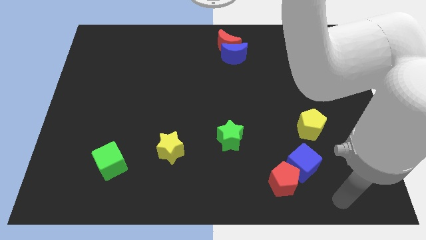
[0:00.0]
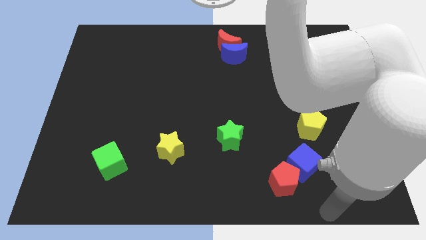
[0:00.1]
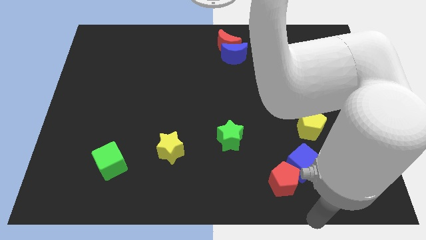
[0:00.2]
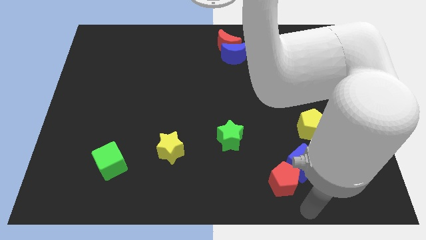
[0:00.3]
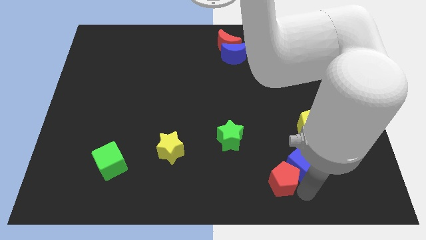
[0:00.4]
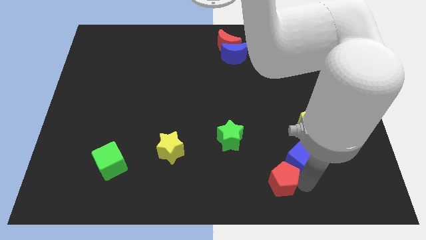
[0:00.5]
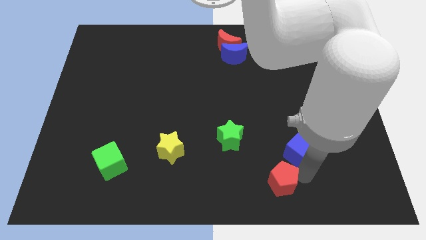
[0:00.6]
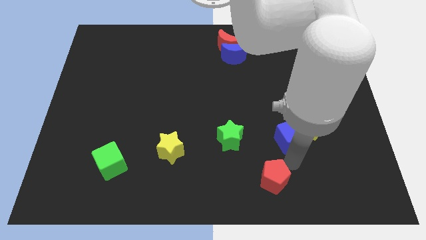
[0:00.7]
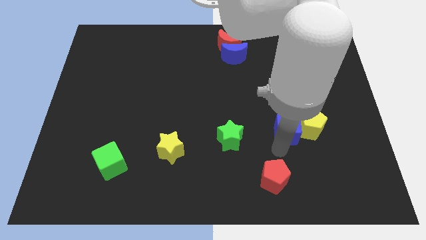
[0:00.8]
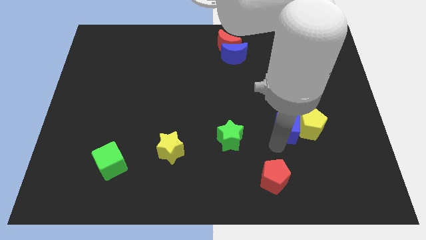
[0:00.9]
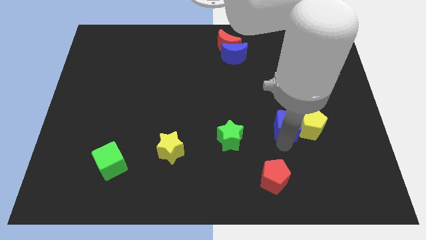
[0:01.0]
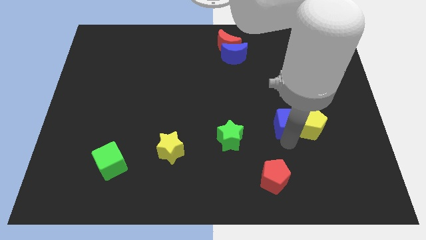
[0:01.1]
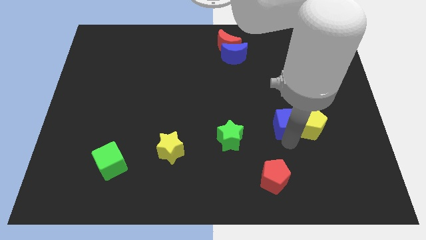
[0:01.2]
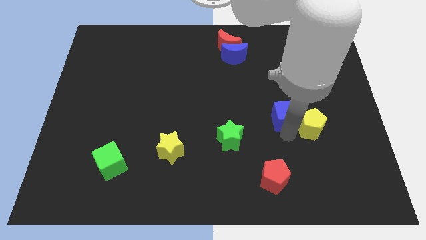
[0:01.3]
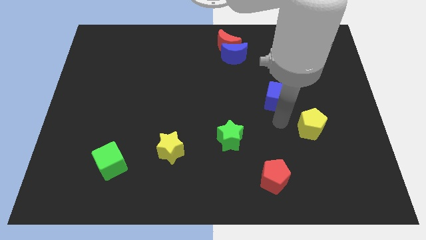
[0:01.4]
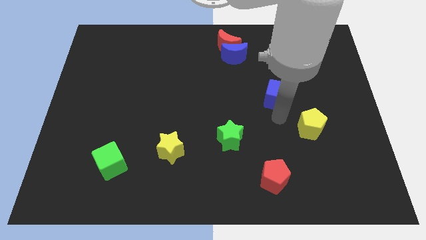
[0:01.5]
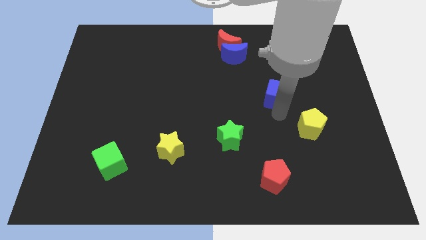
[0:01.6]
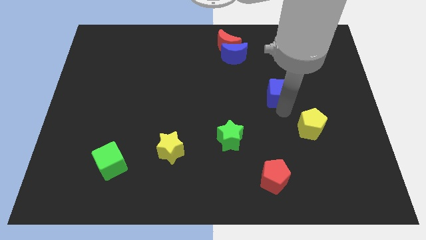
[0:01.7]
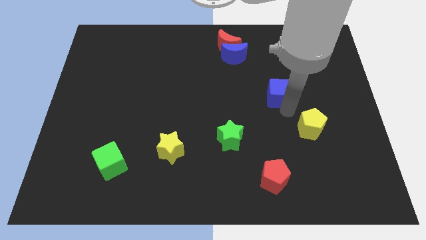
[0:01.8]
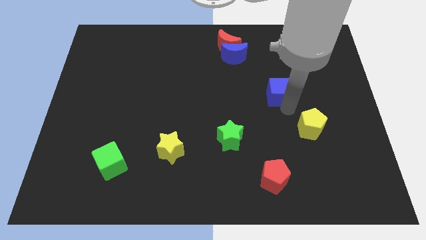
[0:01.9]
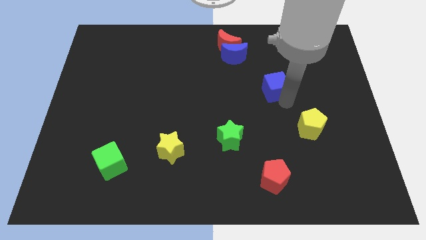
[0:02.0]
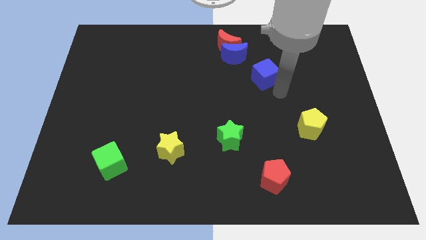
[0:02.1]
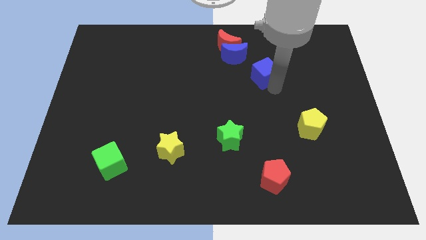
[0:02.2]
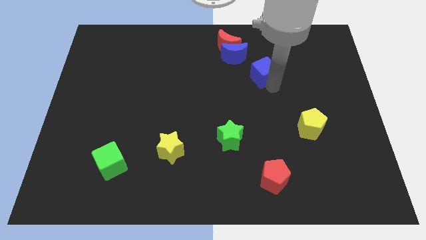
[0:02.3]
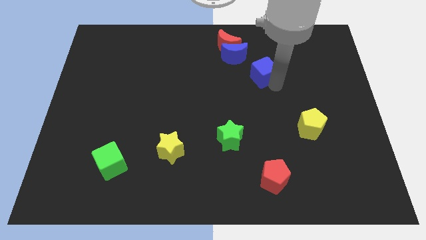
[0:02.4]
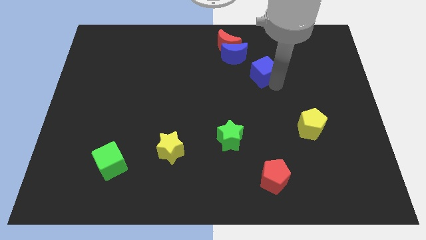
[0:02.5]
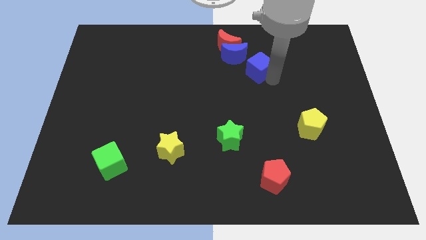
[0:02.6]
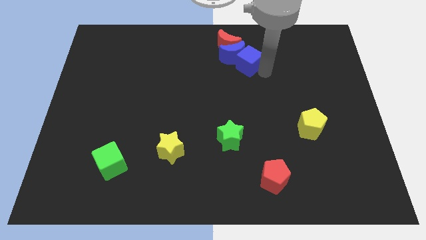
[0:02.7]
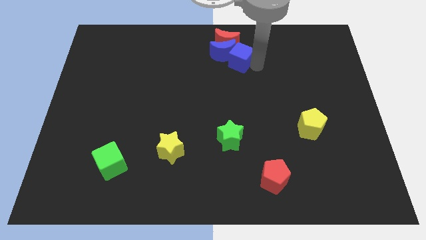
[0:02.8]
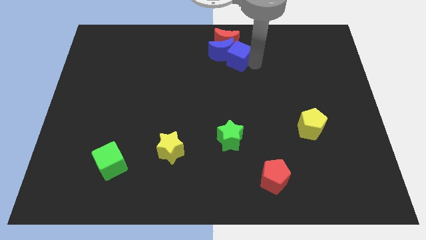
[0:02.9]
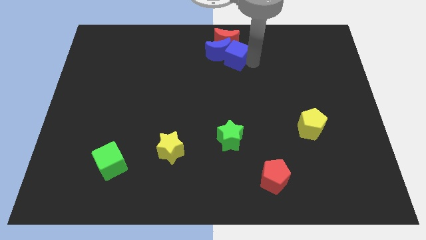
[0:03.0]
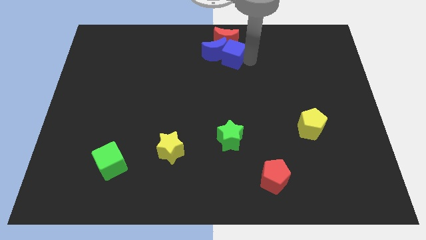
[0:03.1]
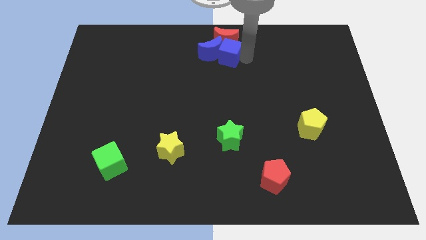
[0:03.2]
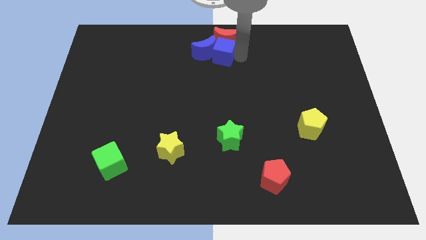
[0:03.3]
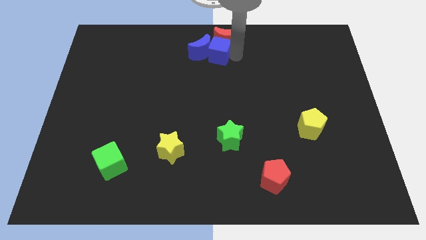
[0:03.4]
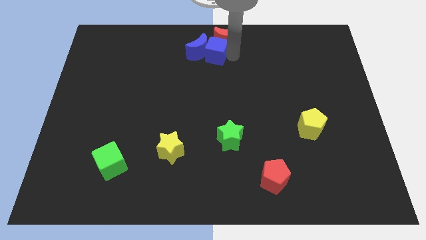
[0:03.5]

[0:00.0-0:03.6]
push the blue cube into the blue moon

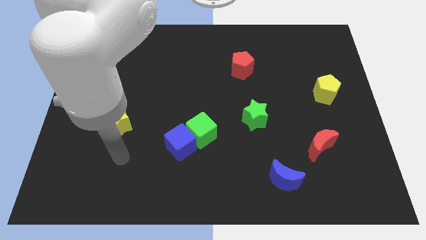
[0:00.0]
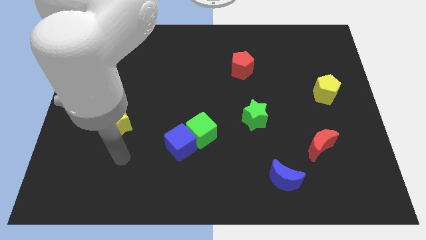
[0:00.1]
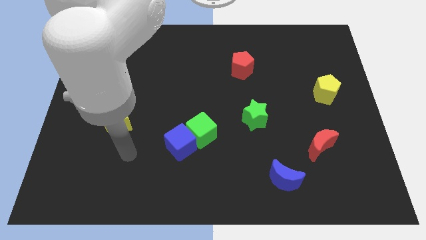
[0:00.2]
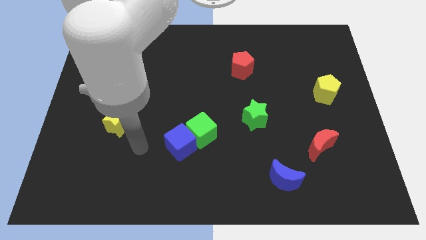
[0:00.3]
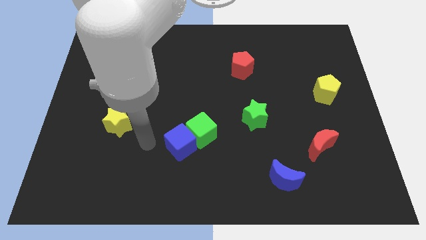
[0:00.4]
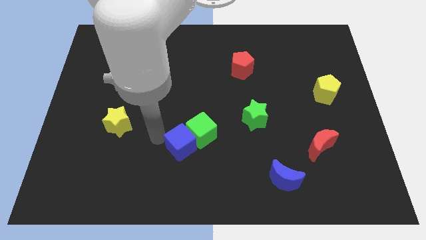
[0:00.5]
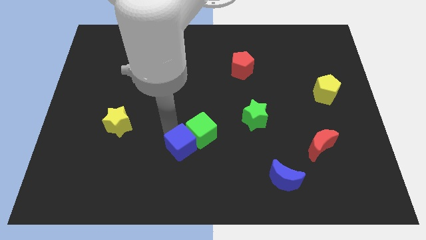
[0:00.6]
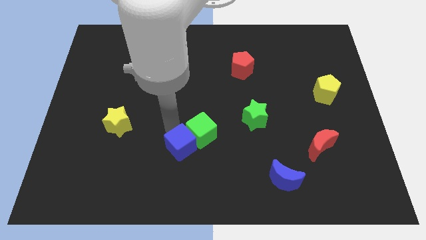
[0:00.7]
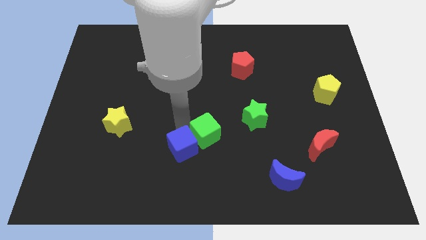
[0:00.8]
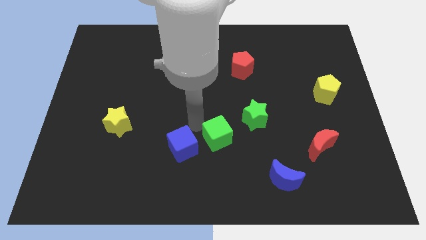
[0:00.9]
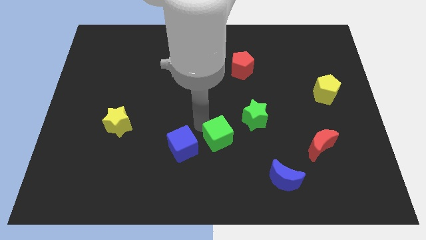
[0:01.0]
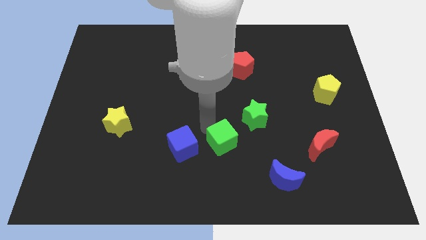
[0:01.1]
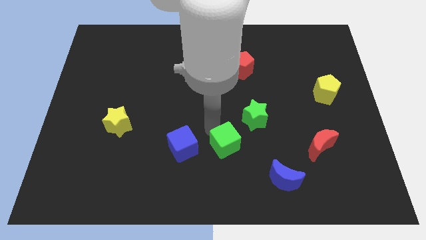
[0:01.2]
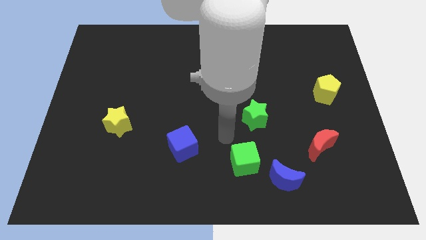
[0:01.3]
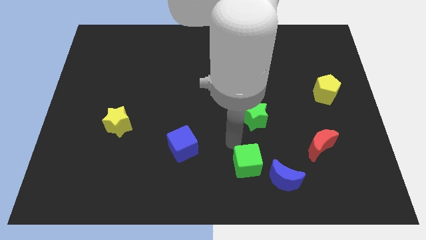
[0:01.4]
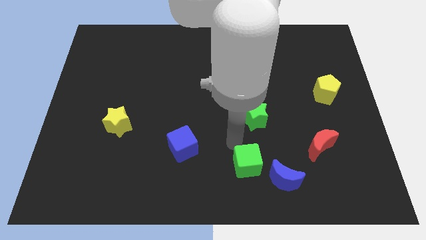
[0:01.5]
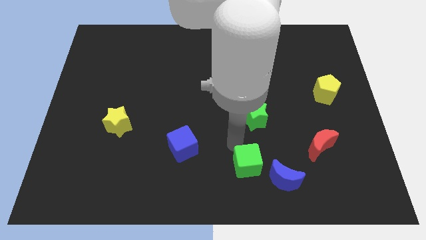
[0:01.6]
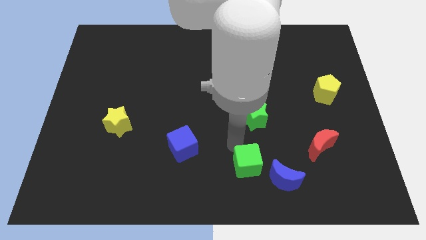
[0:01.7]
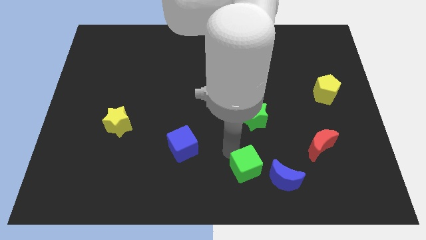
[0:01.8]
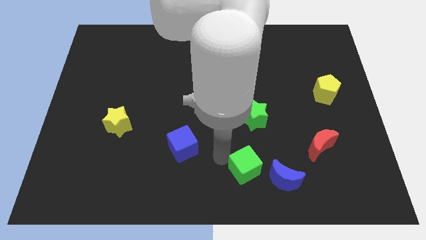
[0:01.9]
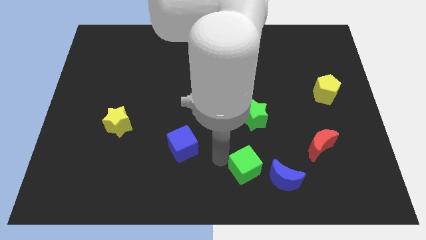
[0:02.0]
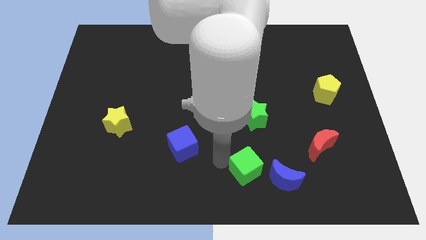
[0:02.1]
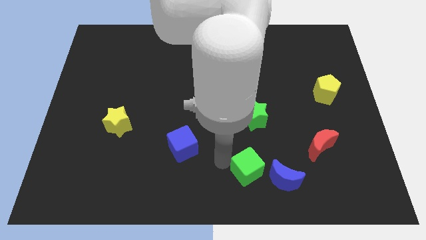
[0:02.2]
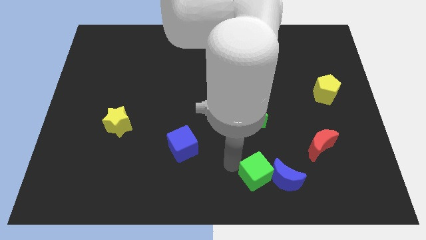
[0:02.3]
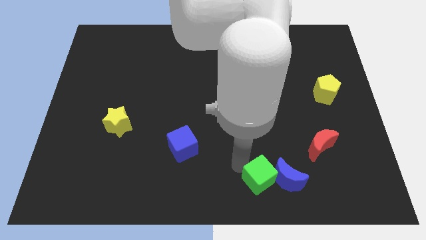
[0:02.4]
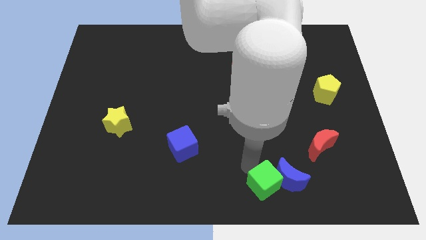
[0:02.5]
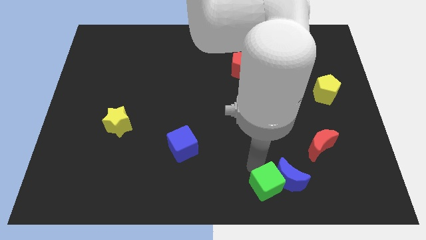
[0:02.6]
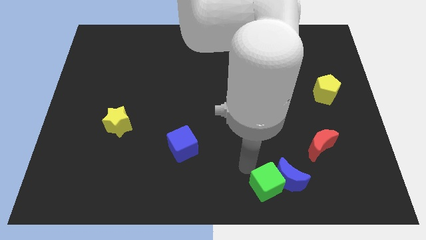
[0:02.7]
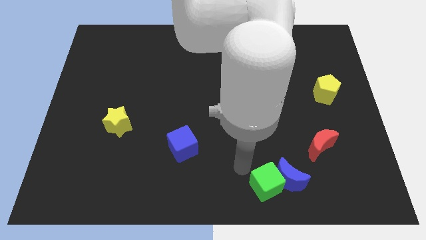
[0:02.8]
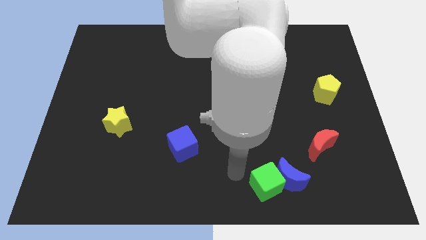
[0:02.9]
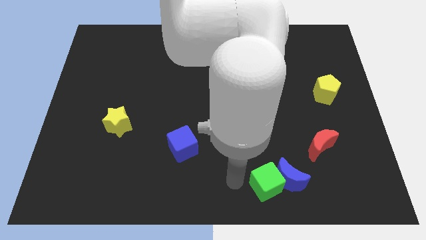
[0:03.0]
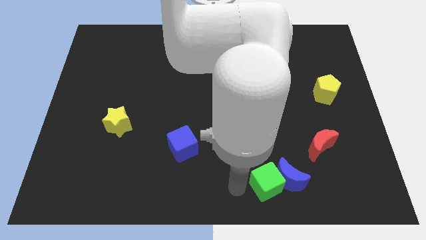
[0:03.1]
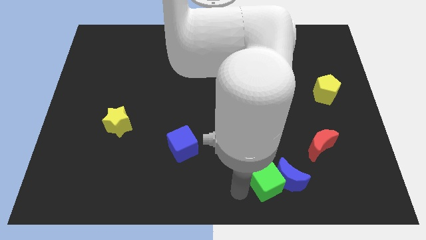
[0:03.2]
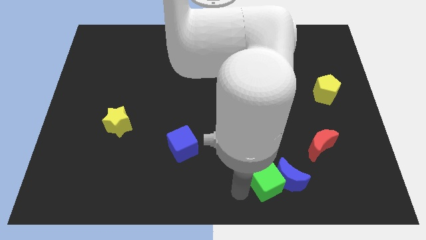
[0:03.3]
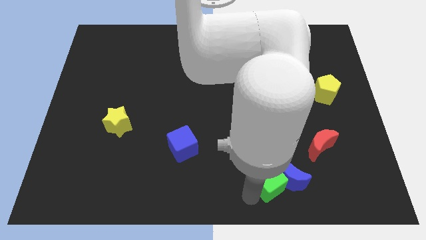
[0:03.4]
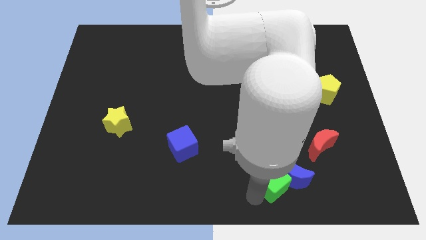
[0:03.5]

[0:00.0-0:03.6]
move the green cube into the blue moon

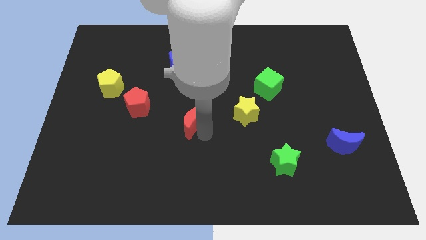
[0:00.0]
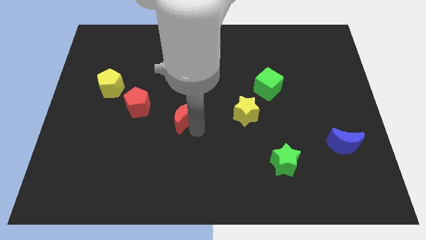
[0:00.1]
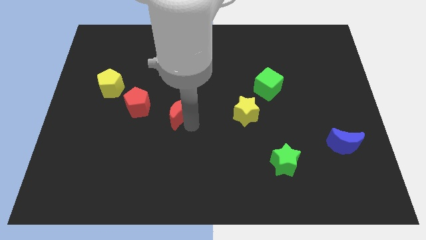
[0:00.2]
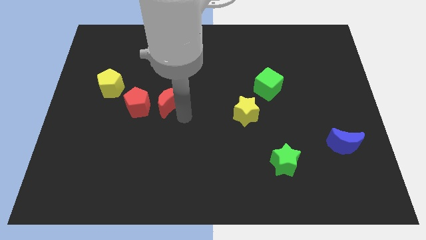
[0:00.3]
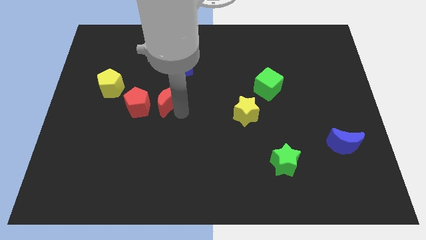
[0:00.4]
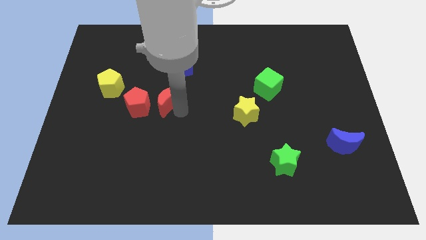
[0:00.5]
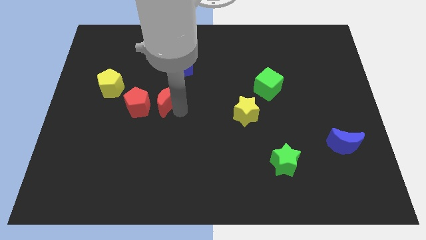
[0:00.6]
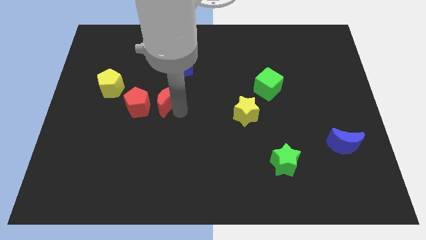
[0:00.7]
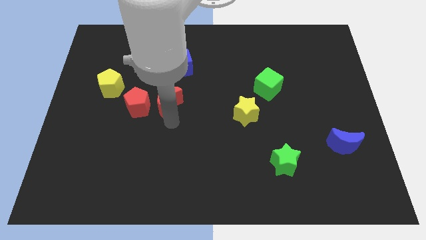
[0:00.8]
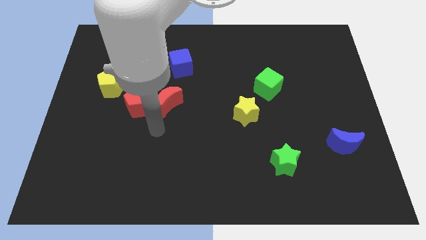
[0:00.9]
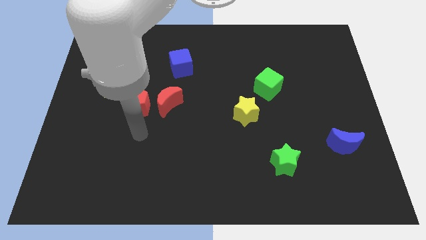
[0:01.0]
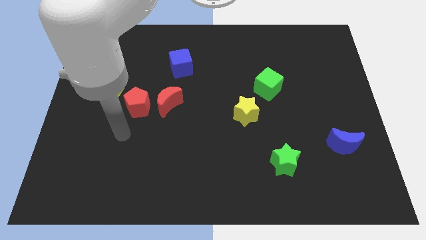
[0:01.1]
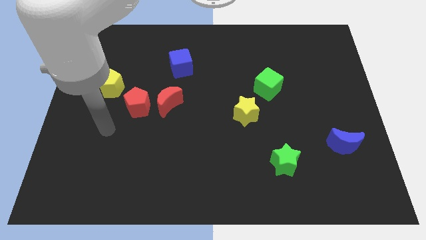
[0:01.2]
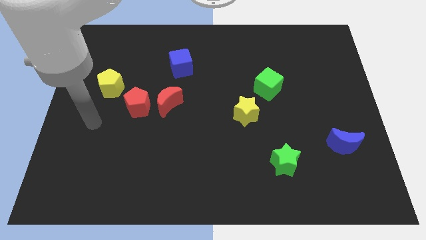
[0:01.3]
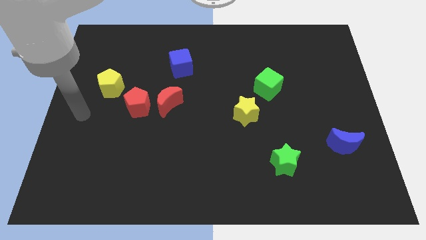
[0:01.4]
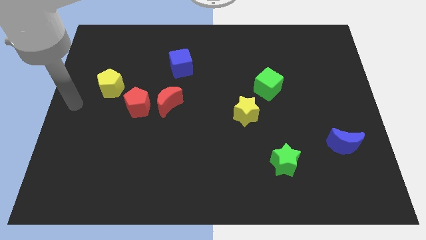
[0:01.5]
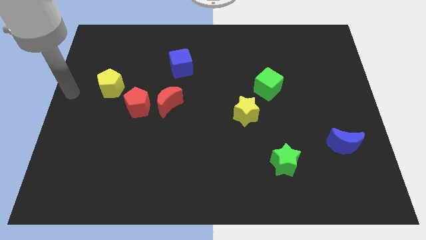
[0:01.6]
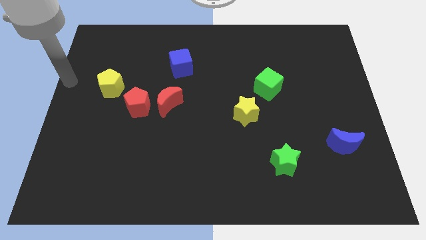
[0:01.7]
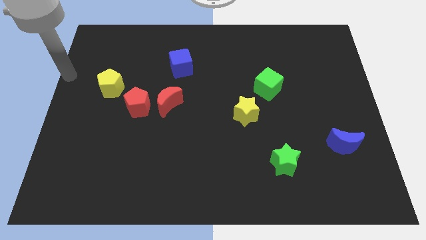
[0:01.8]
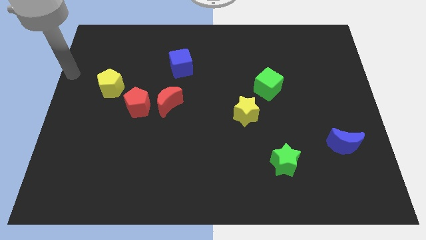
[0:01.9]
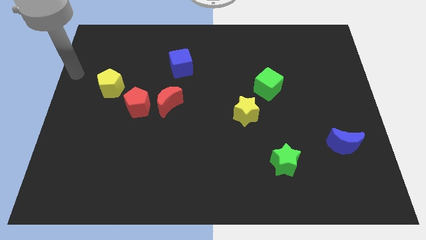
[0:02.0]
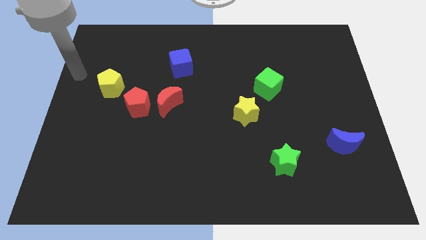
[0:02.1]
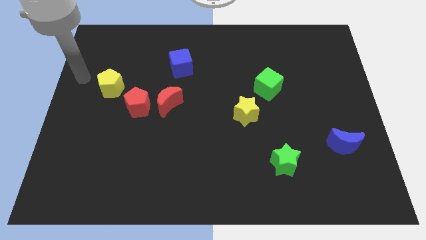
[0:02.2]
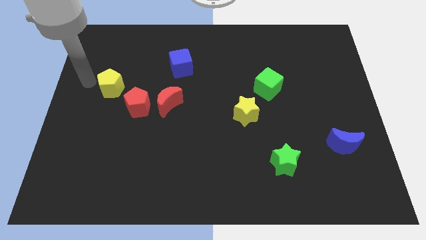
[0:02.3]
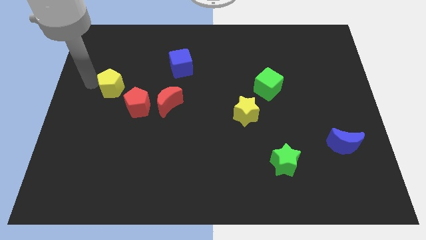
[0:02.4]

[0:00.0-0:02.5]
move the red crescent towards red pentagon
